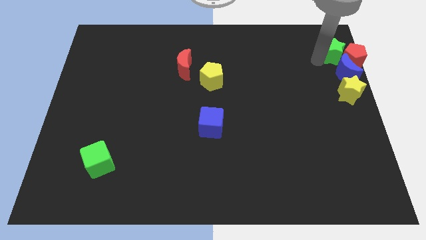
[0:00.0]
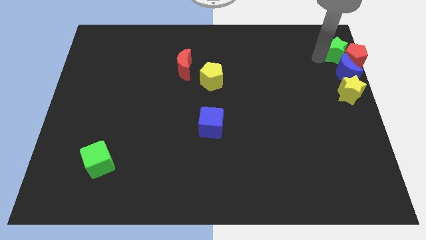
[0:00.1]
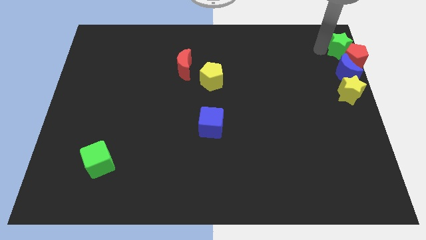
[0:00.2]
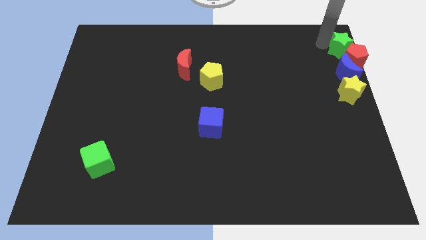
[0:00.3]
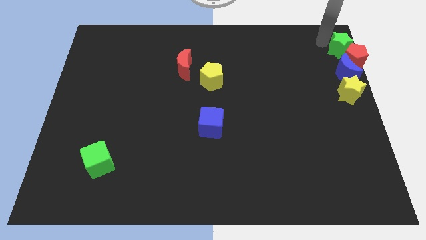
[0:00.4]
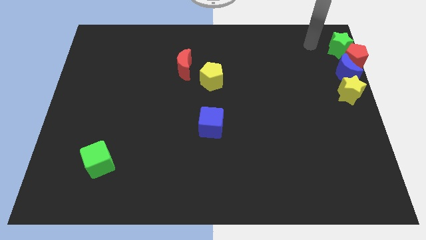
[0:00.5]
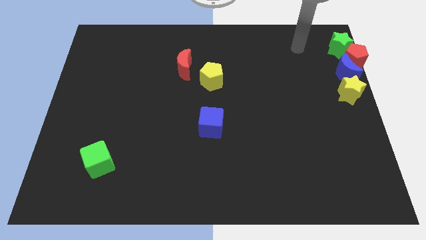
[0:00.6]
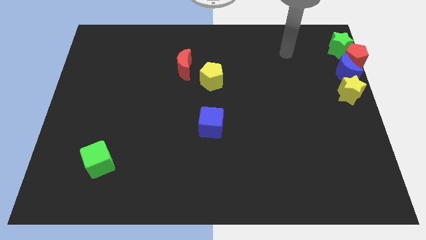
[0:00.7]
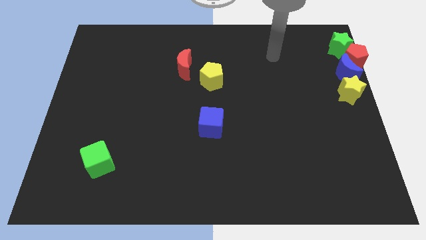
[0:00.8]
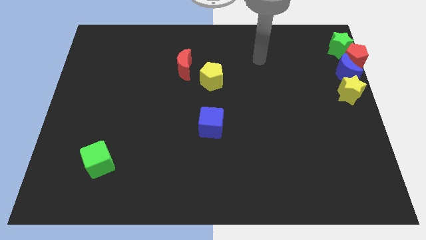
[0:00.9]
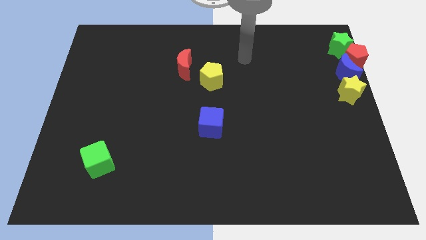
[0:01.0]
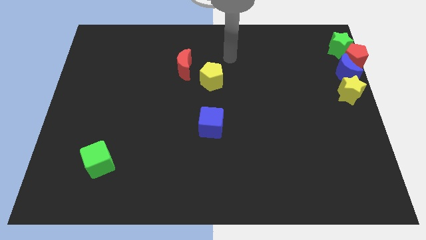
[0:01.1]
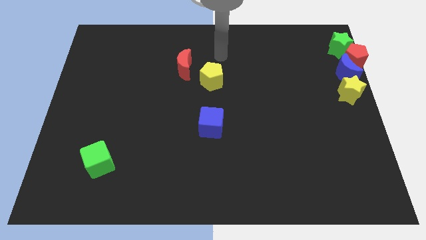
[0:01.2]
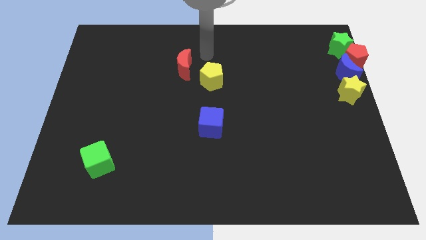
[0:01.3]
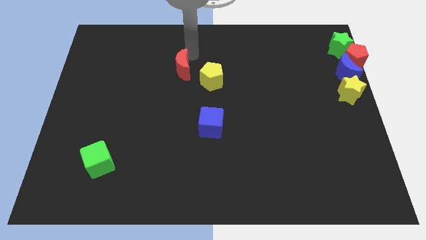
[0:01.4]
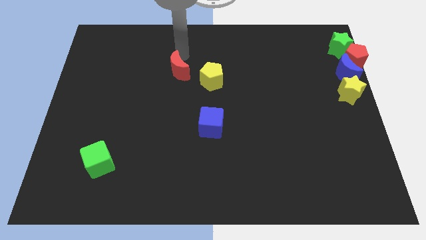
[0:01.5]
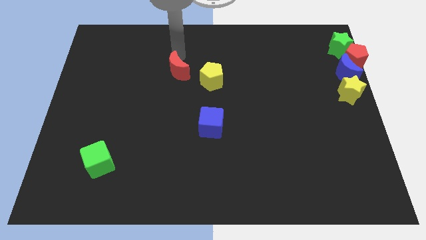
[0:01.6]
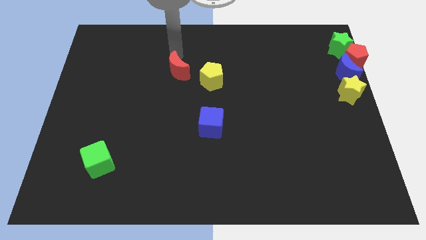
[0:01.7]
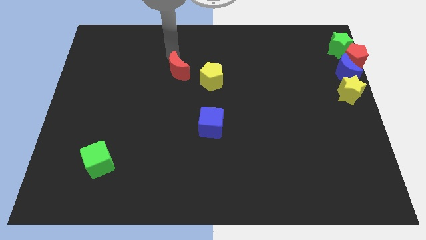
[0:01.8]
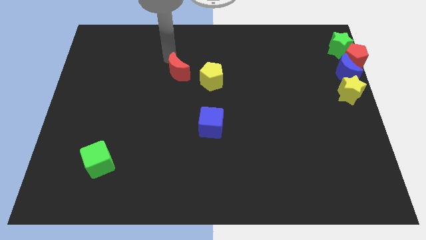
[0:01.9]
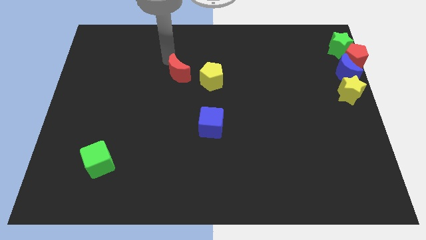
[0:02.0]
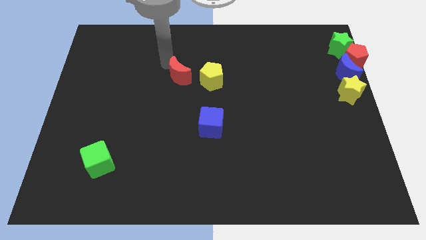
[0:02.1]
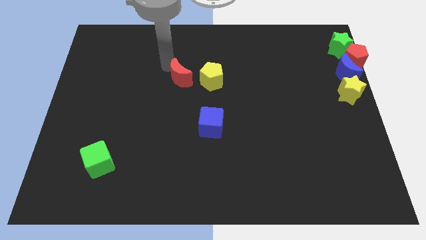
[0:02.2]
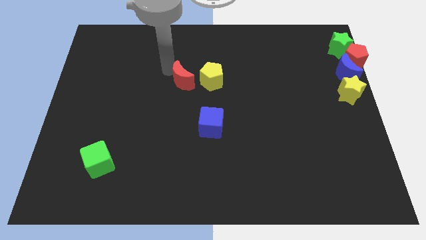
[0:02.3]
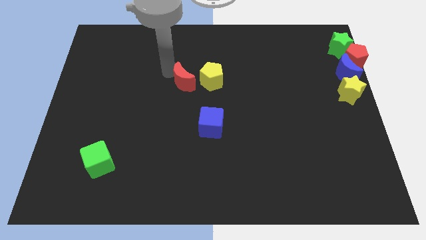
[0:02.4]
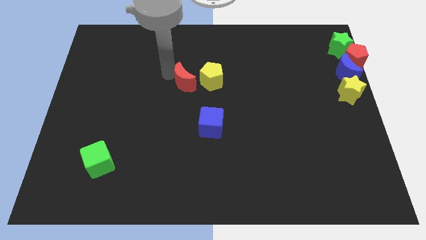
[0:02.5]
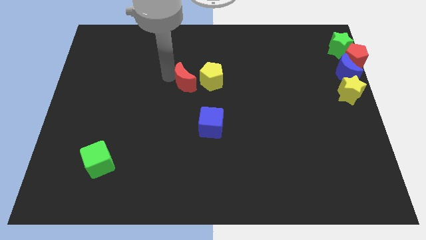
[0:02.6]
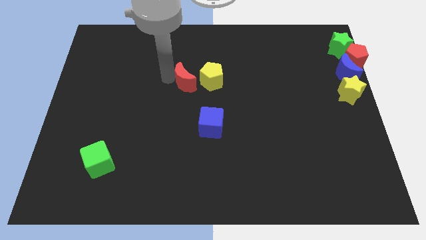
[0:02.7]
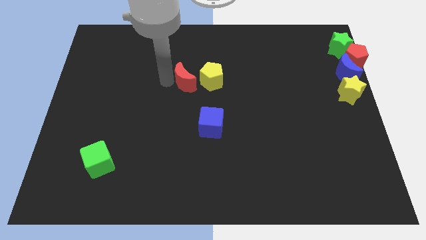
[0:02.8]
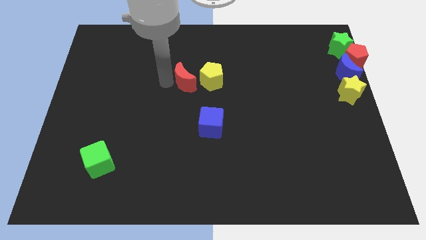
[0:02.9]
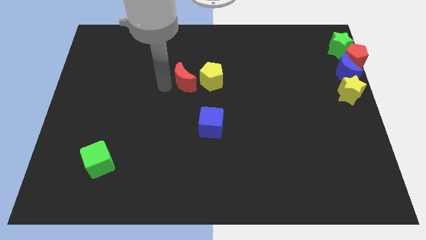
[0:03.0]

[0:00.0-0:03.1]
move the red moon horizontally to the left side of the yellow pentagon

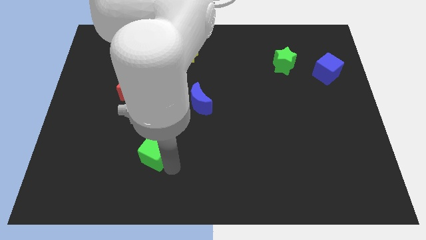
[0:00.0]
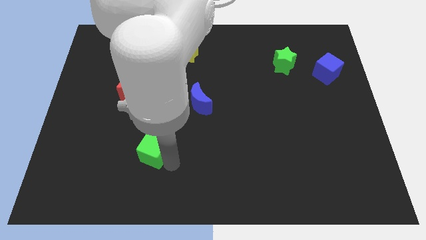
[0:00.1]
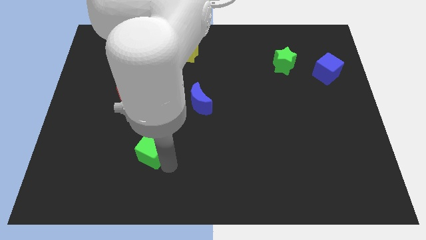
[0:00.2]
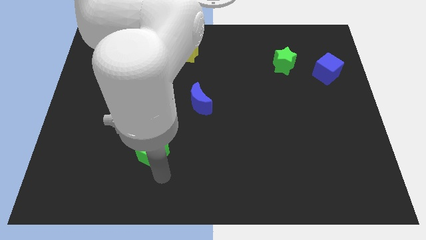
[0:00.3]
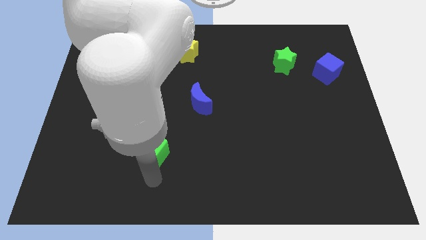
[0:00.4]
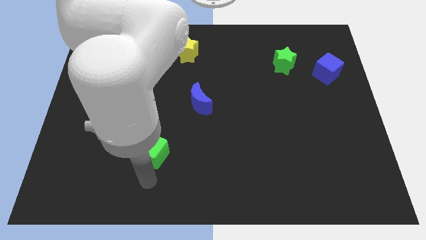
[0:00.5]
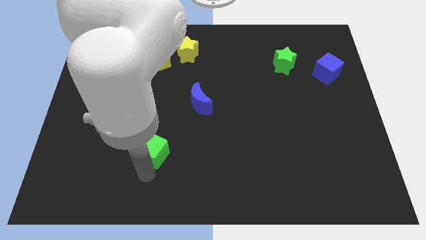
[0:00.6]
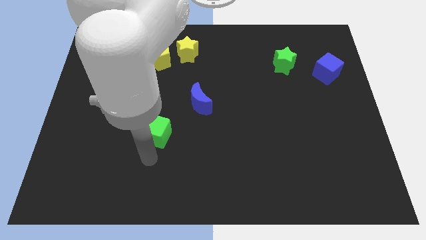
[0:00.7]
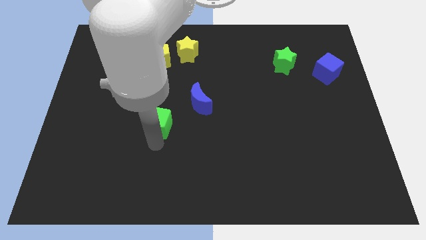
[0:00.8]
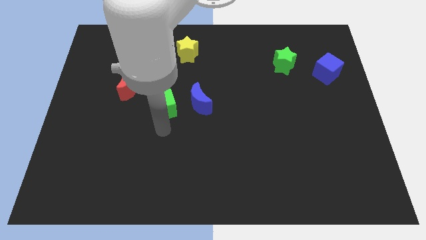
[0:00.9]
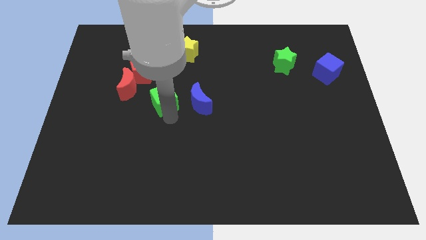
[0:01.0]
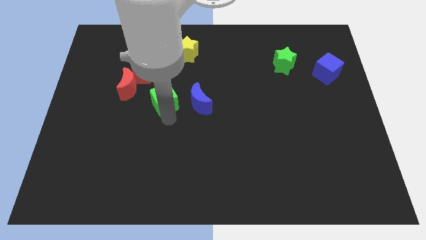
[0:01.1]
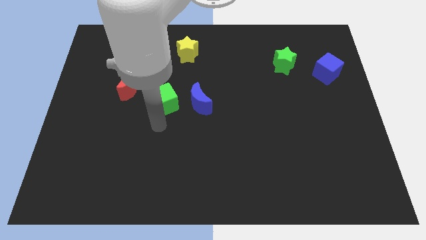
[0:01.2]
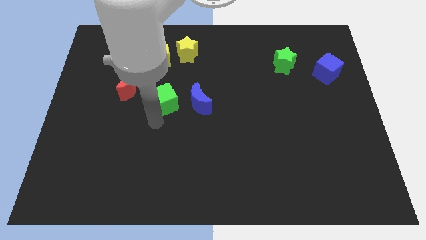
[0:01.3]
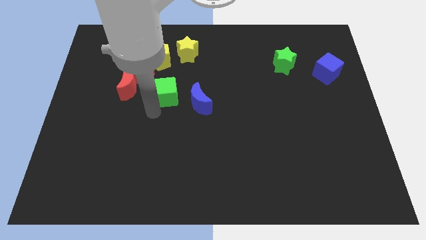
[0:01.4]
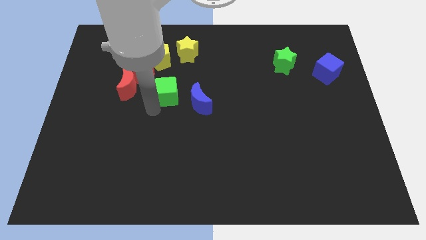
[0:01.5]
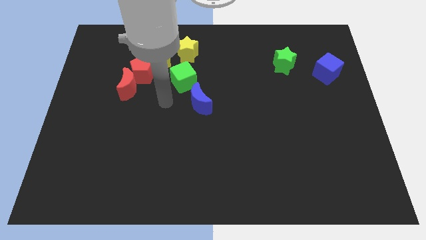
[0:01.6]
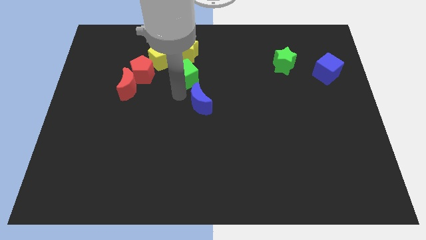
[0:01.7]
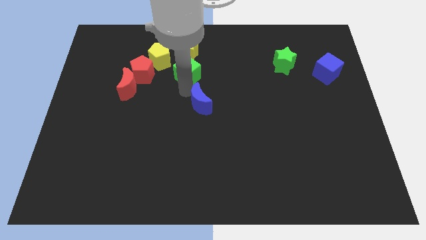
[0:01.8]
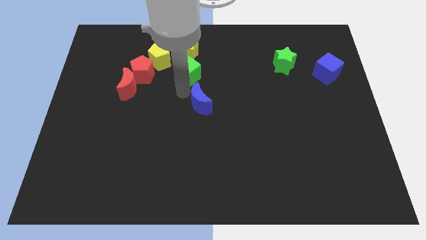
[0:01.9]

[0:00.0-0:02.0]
place the green cube to the bottom of the yellow star

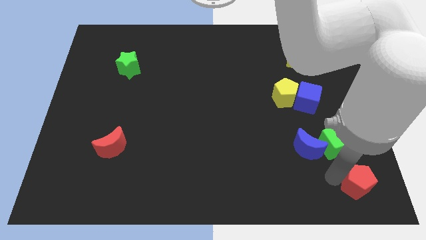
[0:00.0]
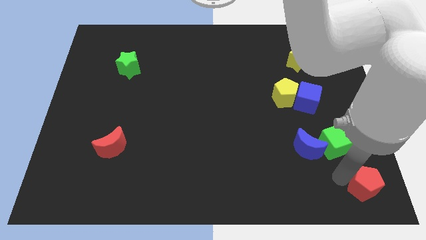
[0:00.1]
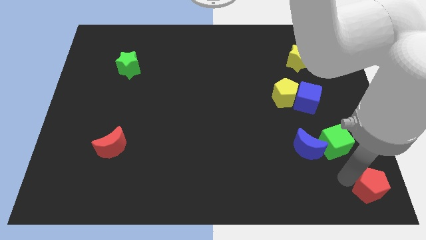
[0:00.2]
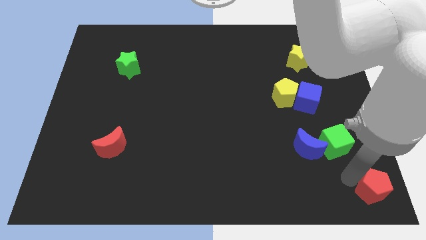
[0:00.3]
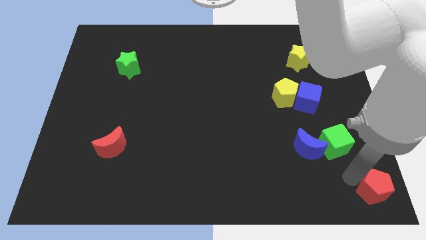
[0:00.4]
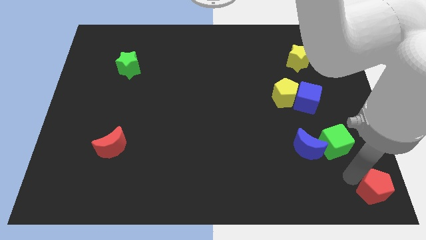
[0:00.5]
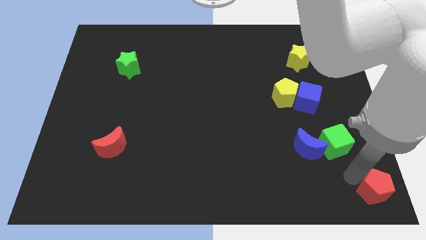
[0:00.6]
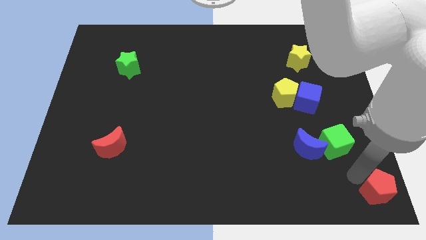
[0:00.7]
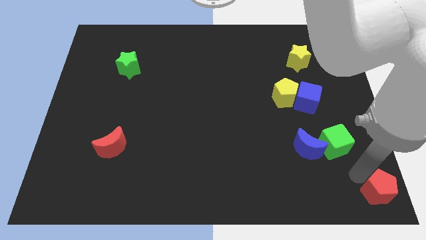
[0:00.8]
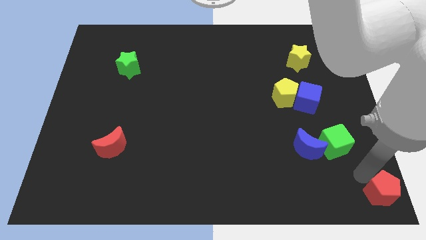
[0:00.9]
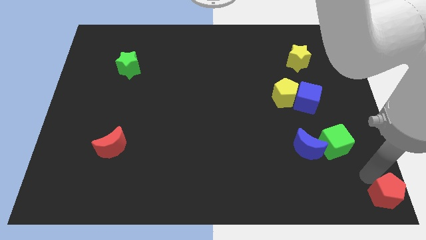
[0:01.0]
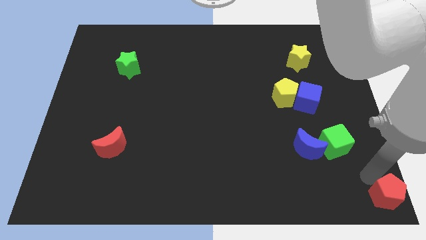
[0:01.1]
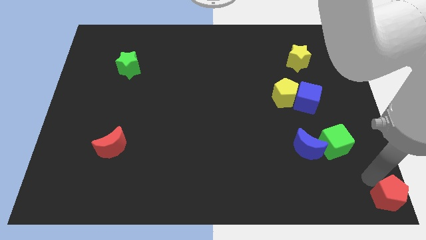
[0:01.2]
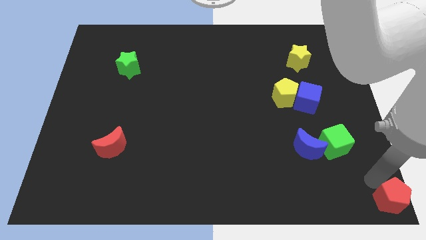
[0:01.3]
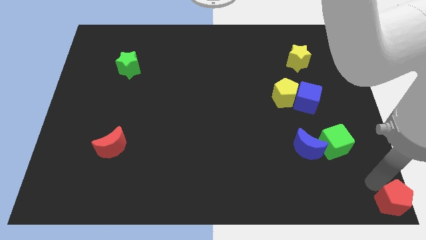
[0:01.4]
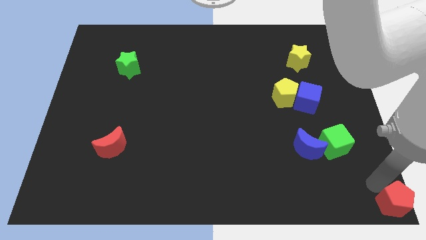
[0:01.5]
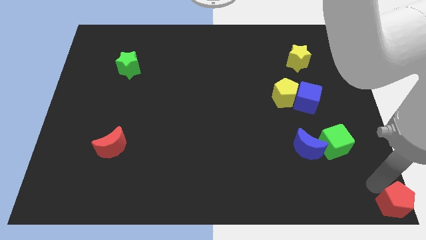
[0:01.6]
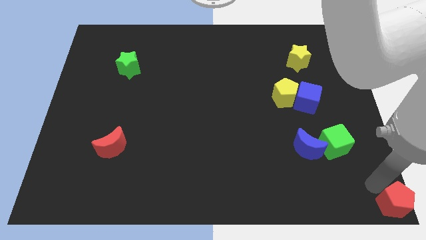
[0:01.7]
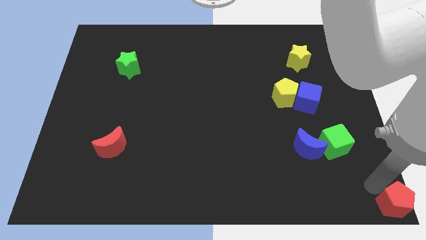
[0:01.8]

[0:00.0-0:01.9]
move the red pentagon to the bottom right corner

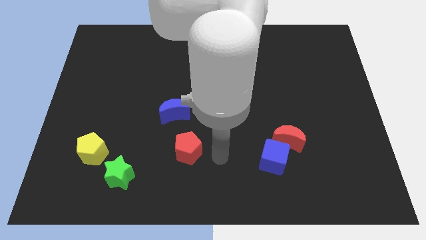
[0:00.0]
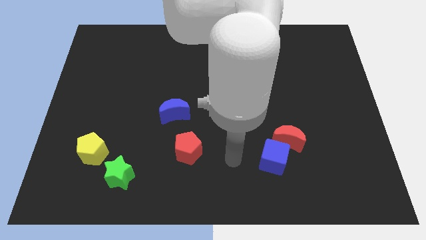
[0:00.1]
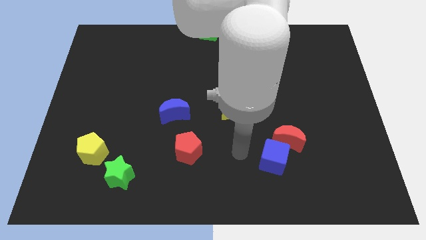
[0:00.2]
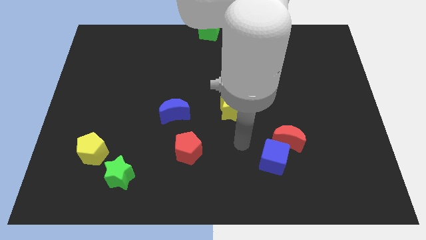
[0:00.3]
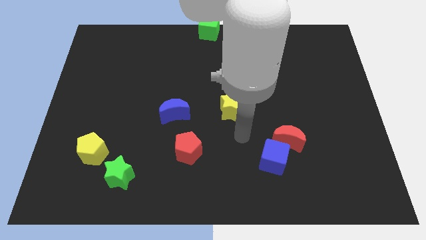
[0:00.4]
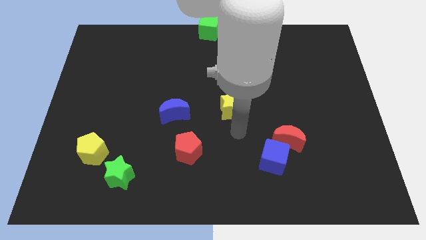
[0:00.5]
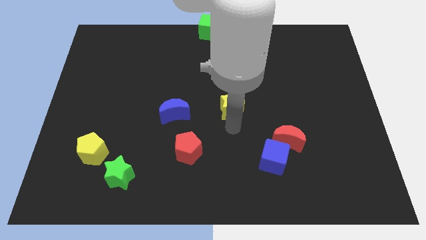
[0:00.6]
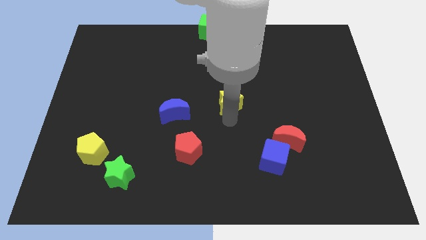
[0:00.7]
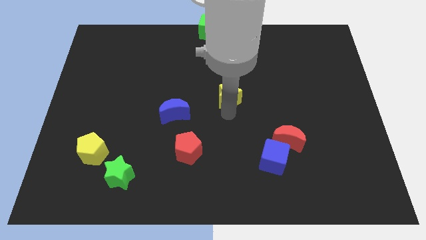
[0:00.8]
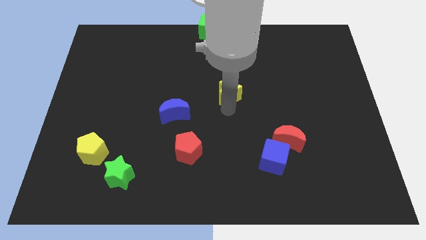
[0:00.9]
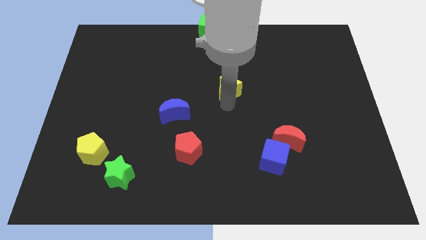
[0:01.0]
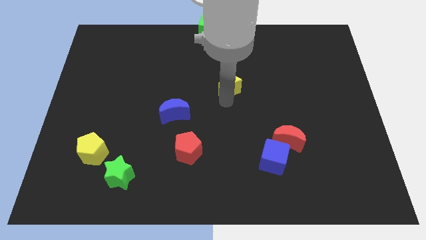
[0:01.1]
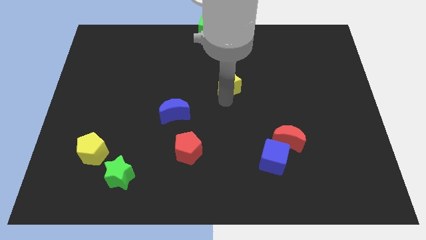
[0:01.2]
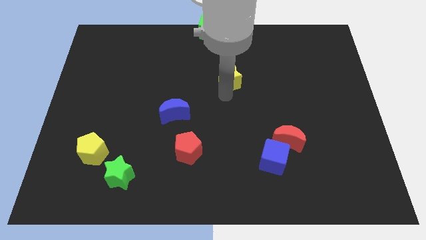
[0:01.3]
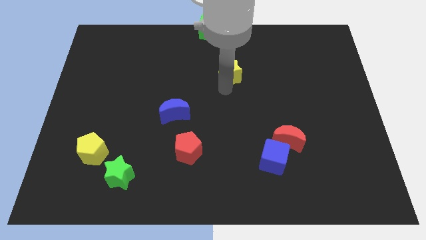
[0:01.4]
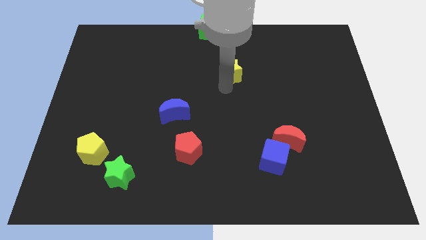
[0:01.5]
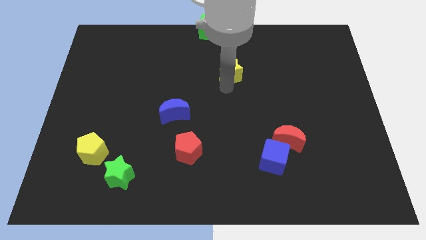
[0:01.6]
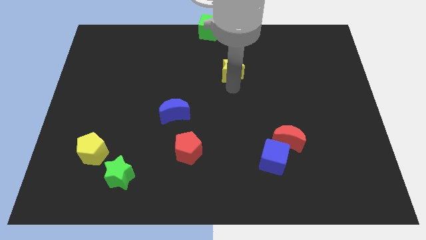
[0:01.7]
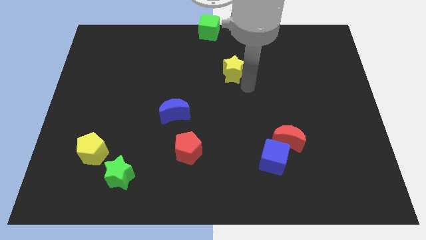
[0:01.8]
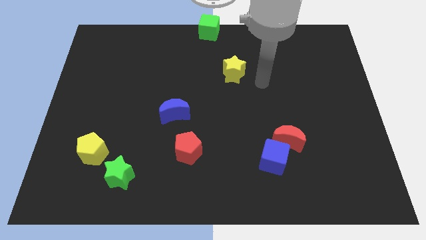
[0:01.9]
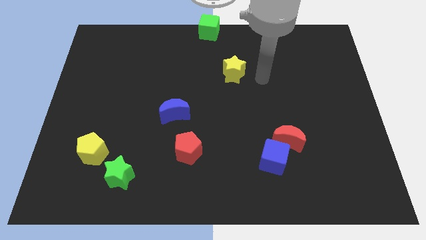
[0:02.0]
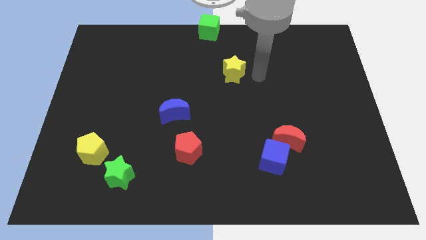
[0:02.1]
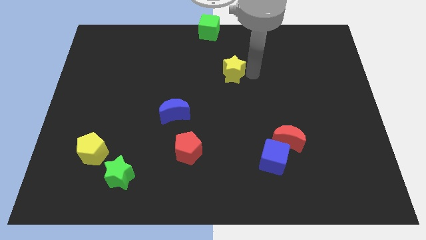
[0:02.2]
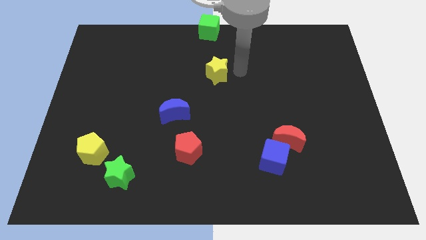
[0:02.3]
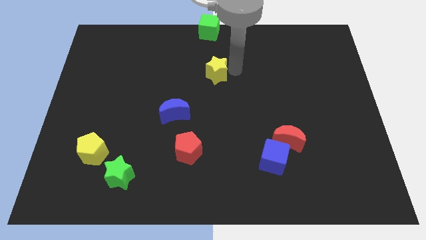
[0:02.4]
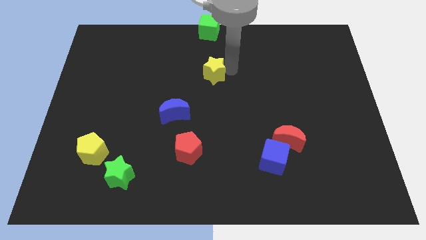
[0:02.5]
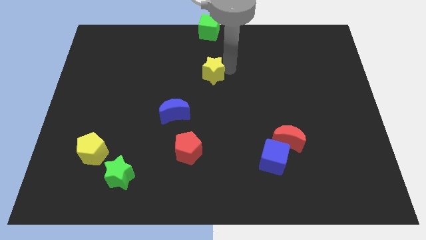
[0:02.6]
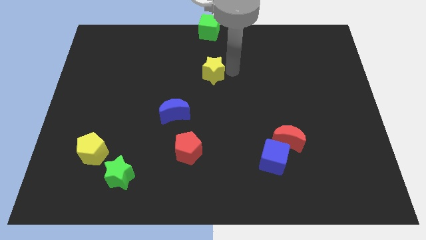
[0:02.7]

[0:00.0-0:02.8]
place the yellow star at the bottom of green cube
